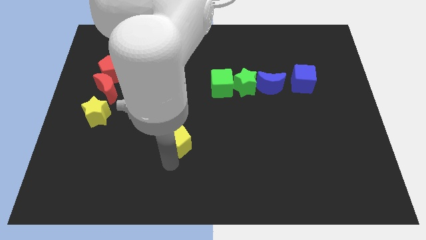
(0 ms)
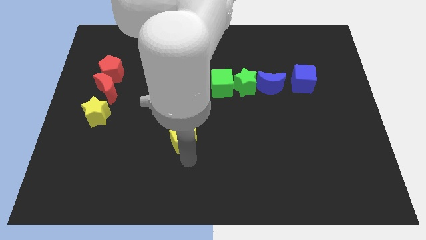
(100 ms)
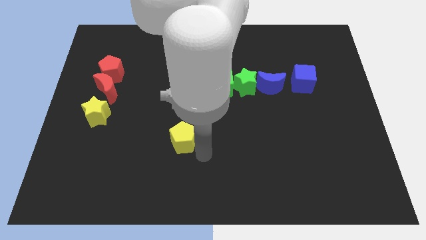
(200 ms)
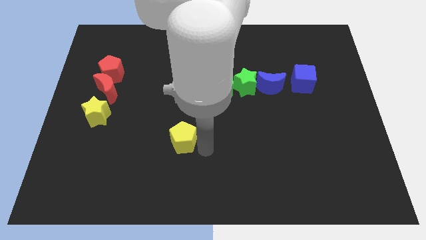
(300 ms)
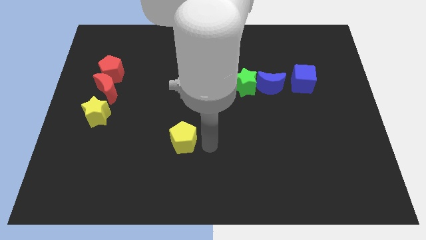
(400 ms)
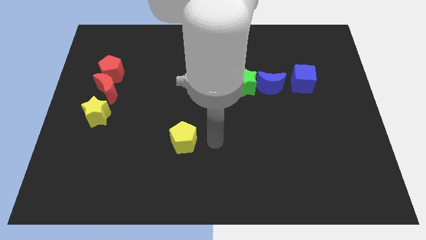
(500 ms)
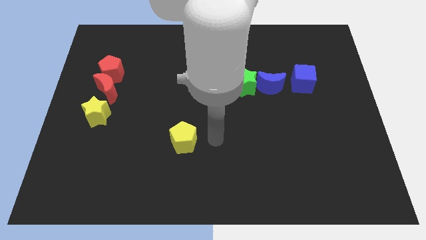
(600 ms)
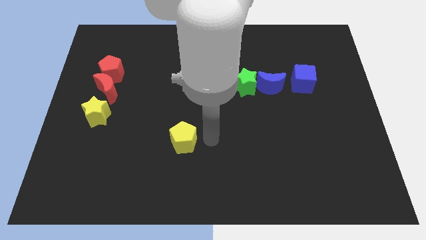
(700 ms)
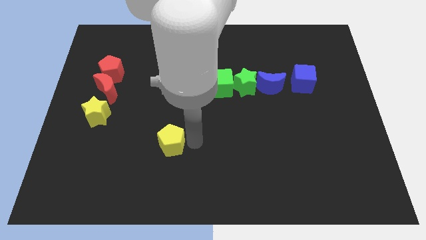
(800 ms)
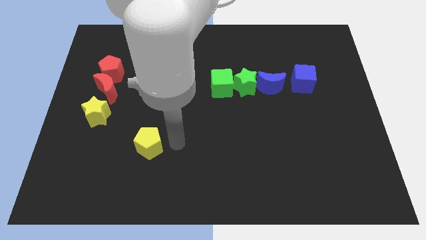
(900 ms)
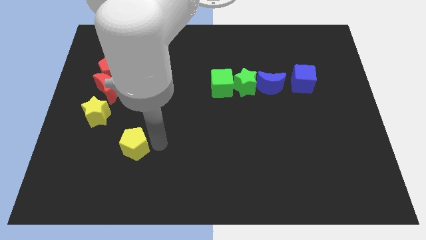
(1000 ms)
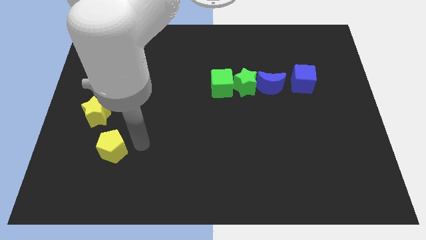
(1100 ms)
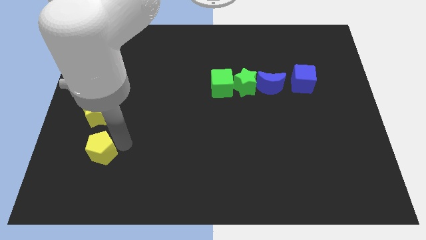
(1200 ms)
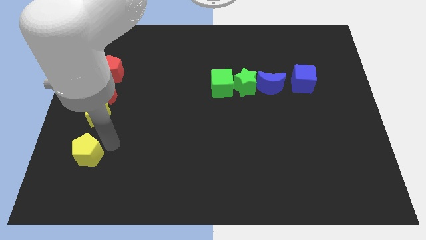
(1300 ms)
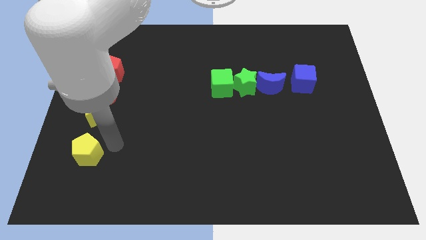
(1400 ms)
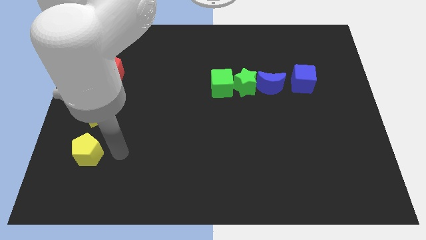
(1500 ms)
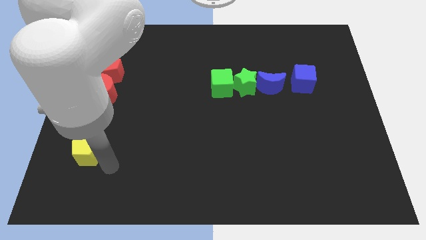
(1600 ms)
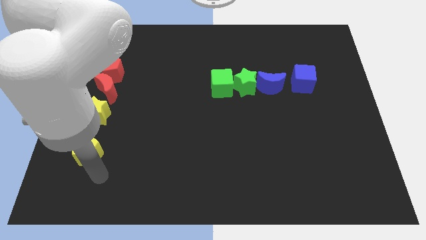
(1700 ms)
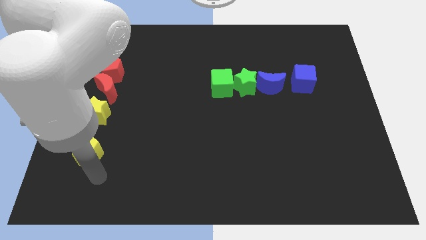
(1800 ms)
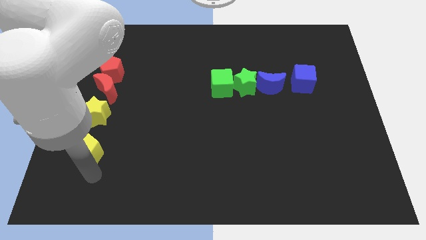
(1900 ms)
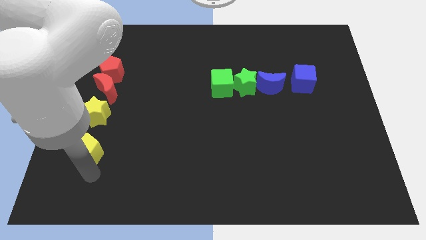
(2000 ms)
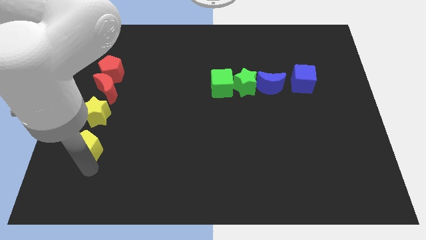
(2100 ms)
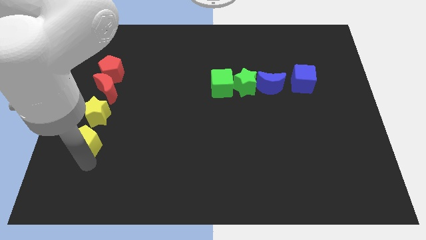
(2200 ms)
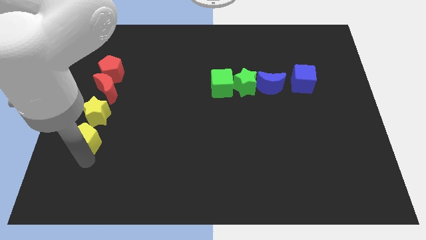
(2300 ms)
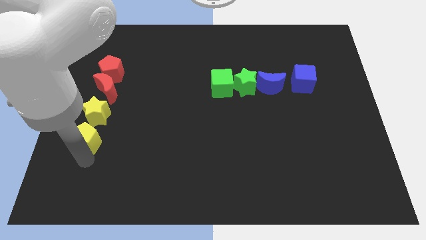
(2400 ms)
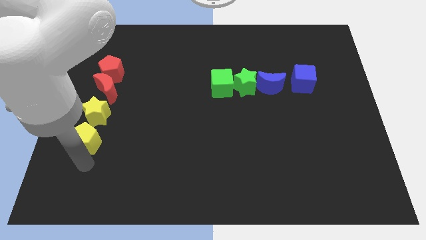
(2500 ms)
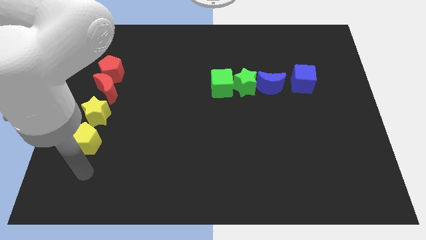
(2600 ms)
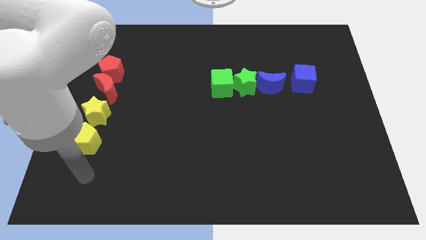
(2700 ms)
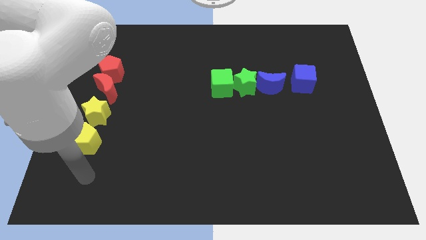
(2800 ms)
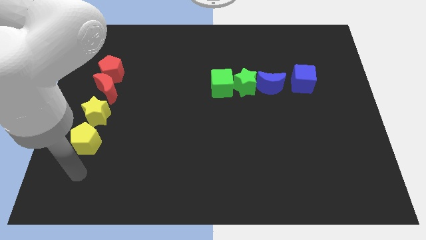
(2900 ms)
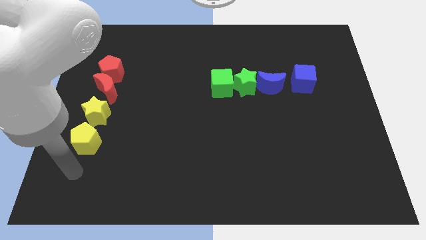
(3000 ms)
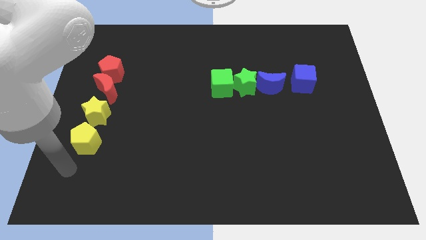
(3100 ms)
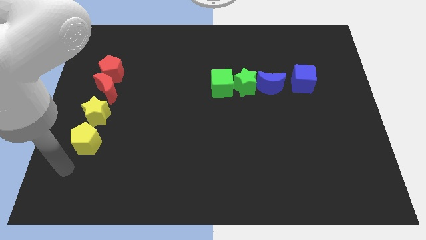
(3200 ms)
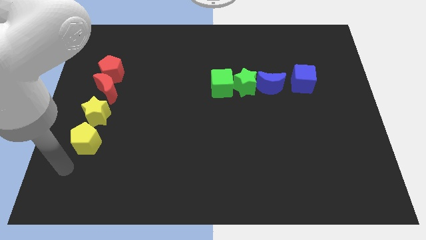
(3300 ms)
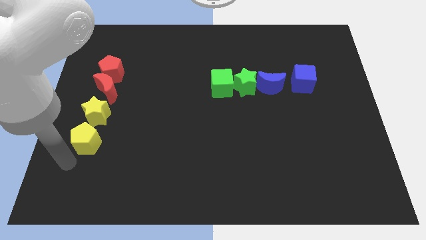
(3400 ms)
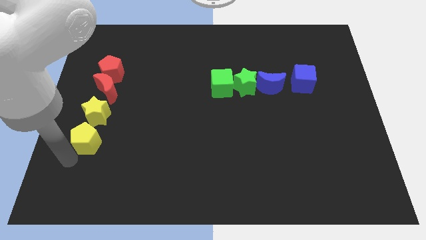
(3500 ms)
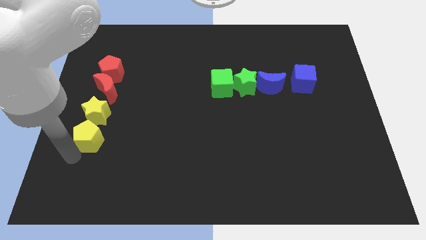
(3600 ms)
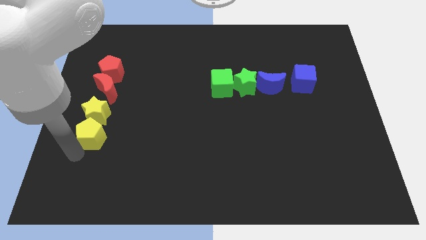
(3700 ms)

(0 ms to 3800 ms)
move yellow pentagon into the yellow star

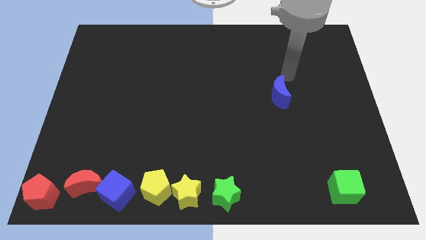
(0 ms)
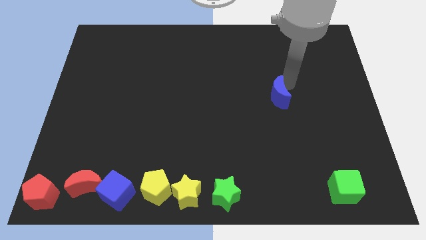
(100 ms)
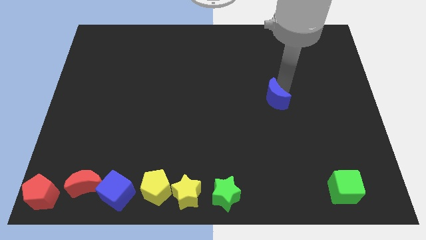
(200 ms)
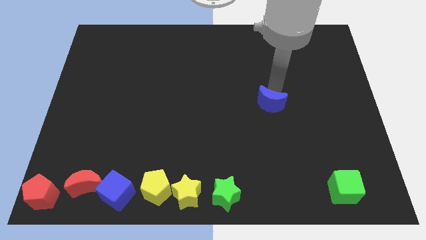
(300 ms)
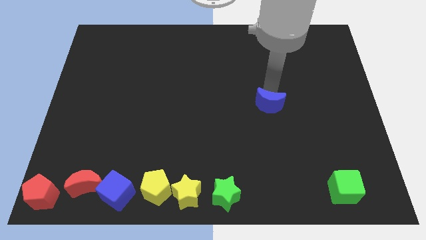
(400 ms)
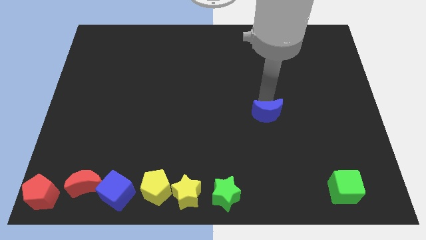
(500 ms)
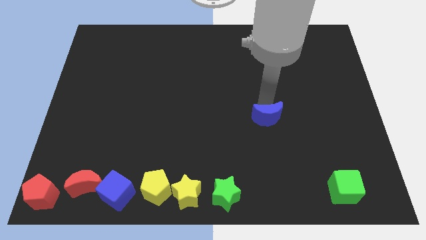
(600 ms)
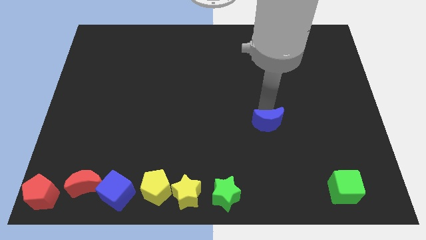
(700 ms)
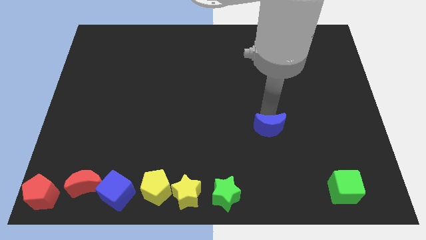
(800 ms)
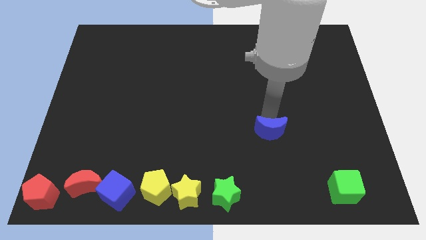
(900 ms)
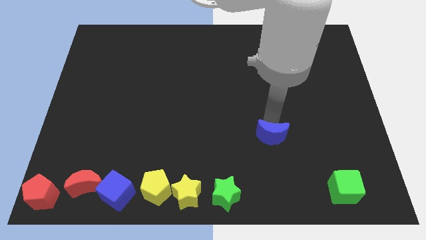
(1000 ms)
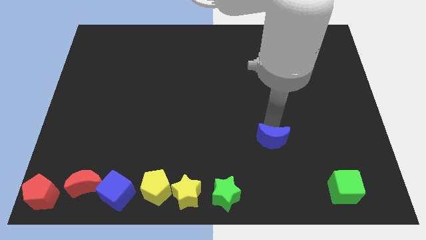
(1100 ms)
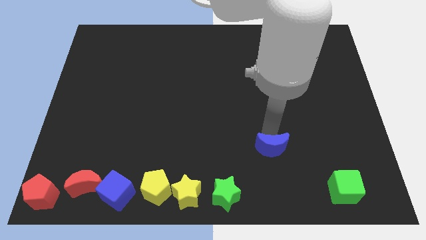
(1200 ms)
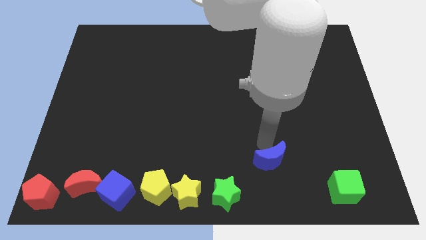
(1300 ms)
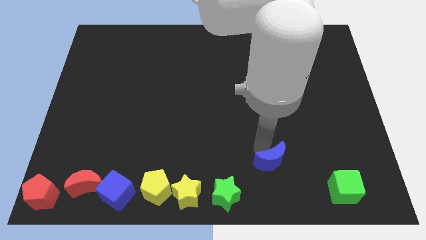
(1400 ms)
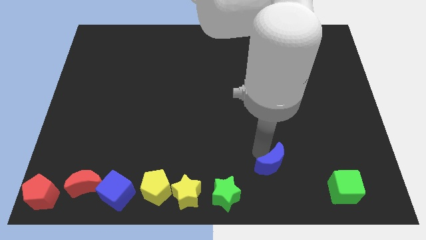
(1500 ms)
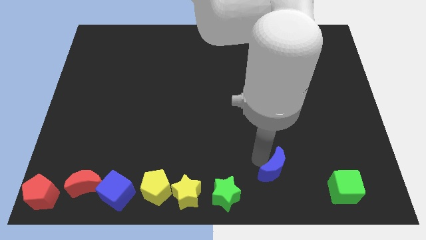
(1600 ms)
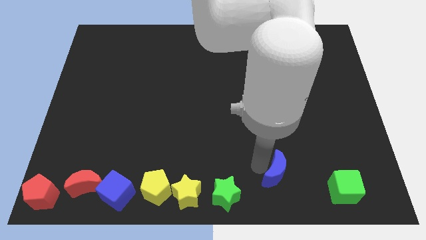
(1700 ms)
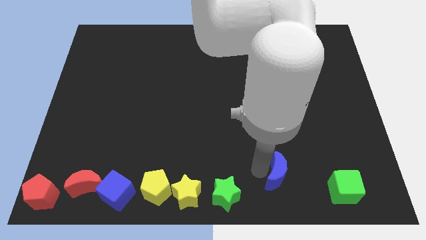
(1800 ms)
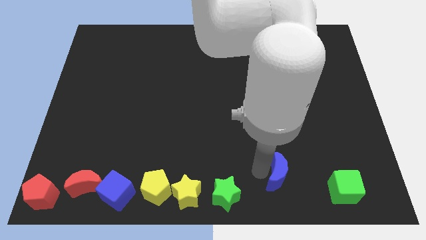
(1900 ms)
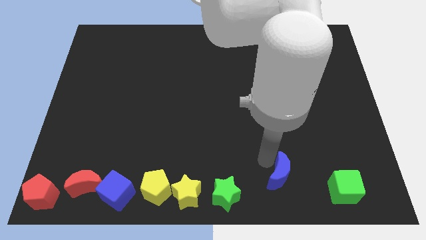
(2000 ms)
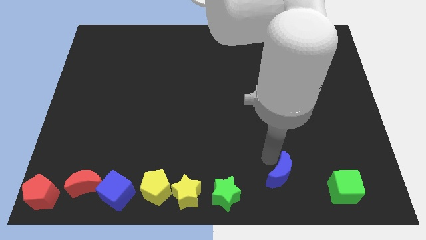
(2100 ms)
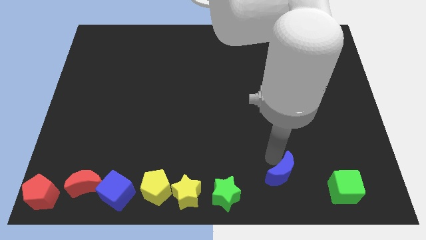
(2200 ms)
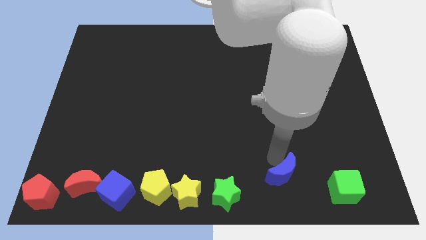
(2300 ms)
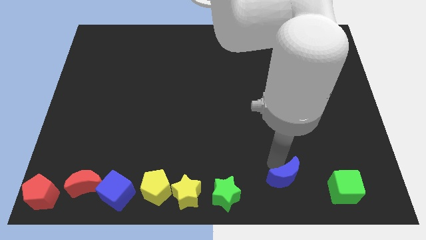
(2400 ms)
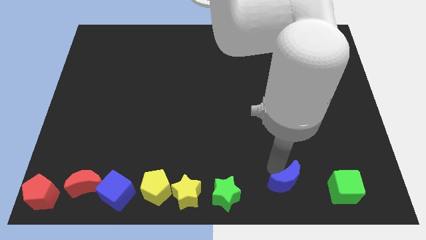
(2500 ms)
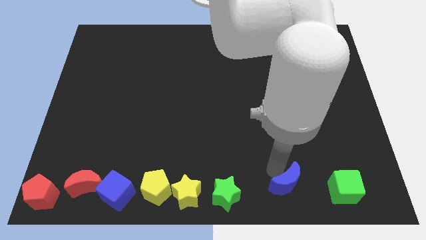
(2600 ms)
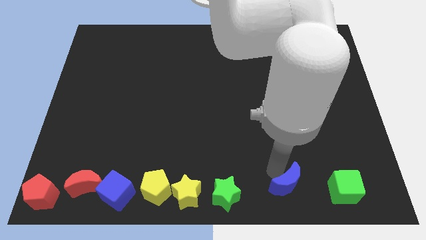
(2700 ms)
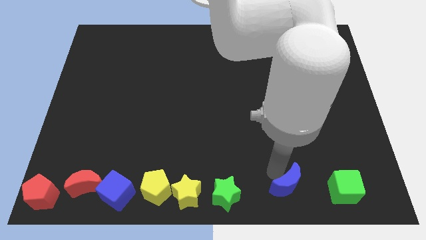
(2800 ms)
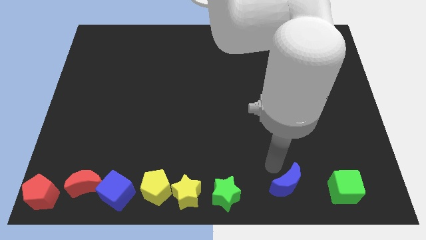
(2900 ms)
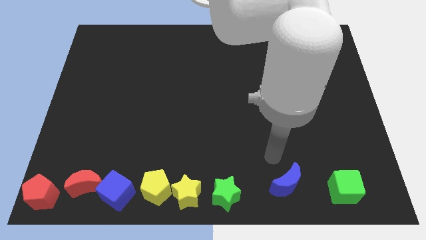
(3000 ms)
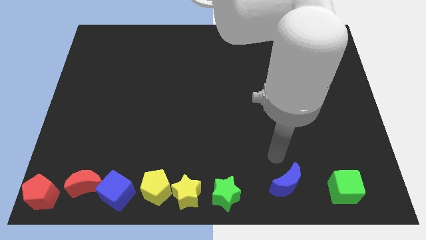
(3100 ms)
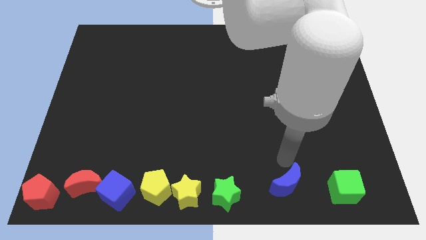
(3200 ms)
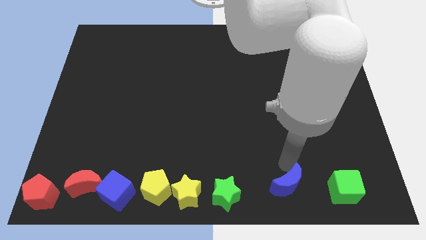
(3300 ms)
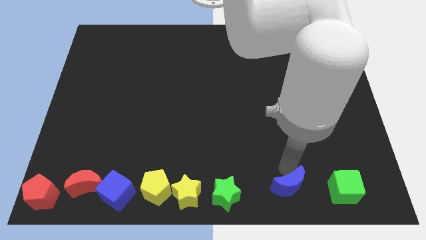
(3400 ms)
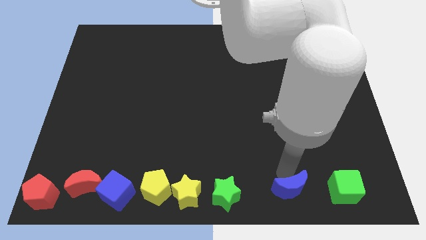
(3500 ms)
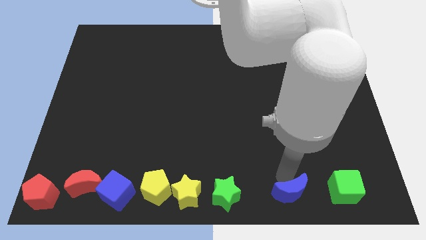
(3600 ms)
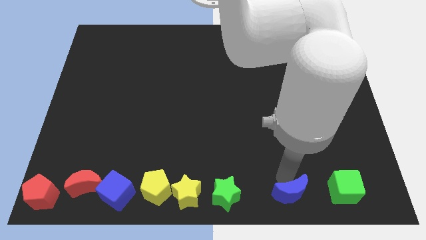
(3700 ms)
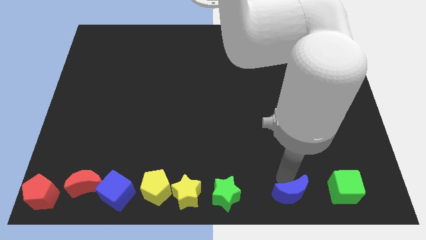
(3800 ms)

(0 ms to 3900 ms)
put the blue moon in between the green blocks

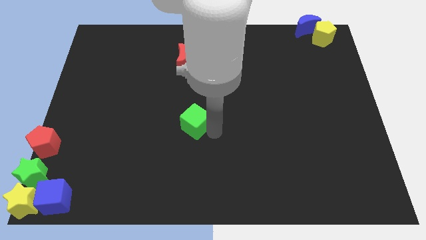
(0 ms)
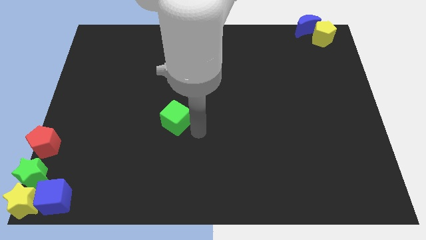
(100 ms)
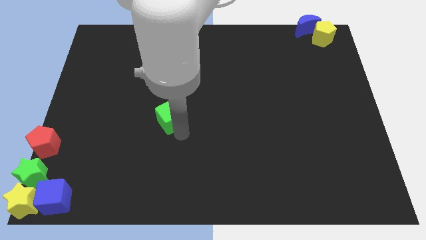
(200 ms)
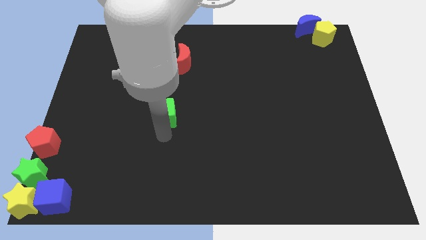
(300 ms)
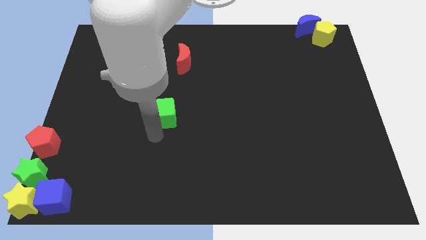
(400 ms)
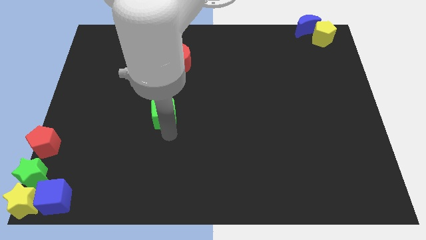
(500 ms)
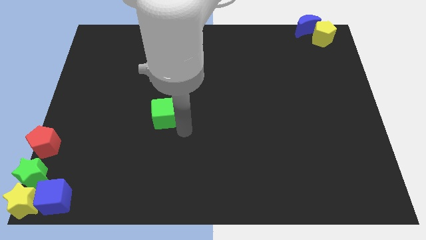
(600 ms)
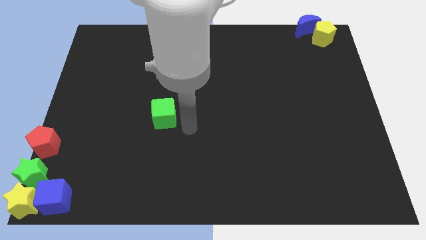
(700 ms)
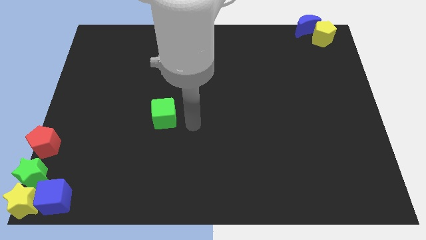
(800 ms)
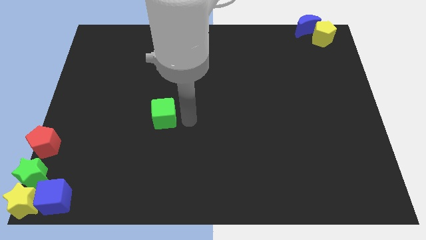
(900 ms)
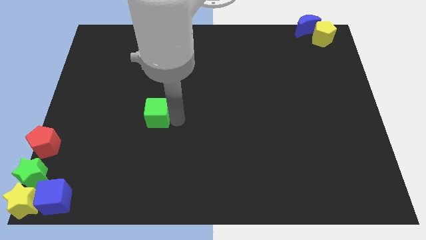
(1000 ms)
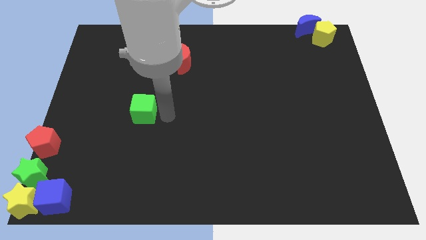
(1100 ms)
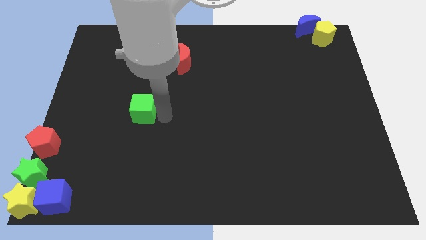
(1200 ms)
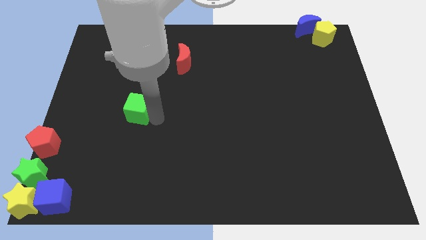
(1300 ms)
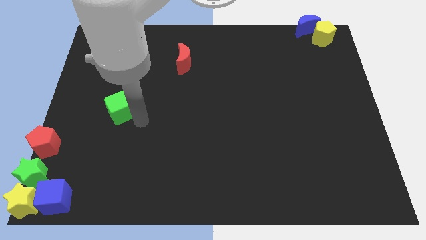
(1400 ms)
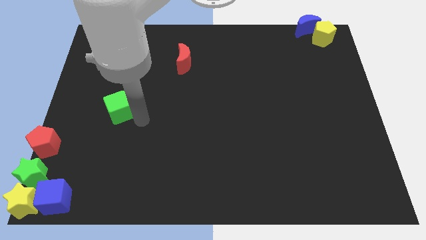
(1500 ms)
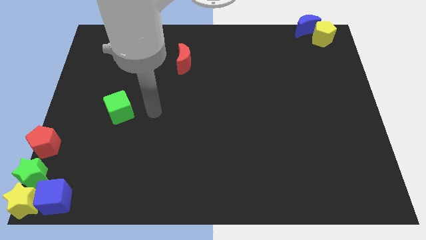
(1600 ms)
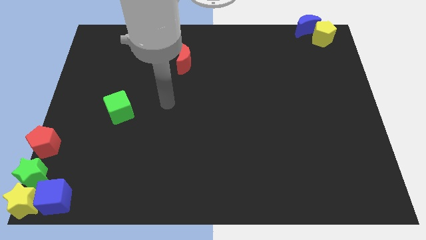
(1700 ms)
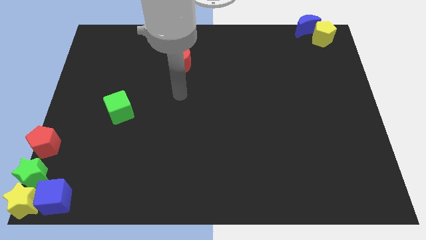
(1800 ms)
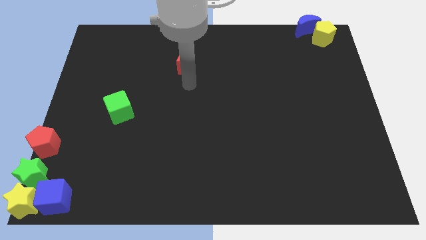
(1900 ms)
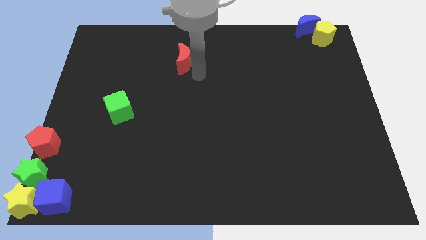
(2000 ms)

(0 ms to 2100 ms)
move your arm to the bottom of the red moon
